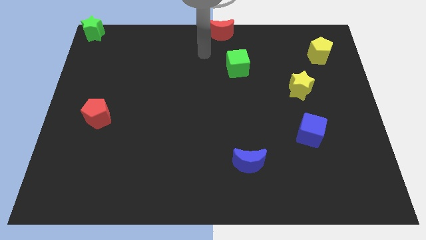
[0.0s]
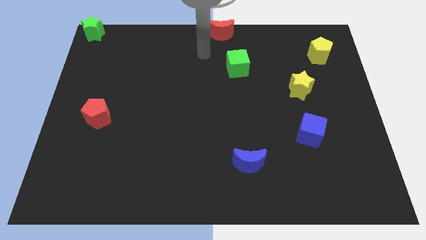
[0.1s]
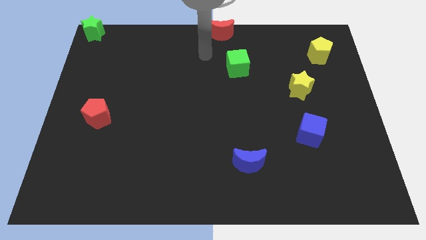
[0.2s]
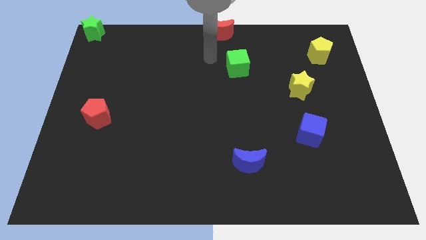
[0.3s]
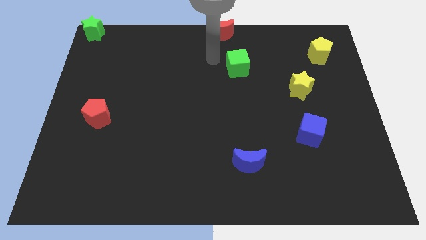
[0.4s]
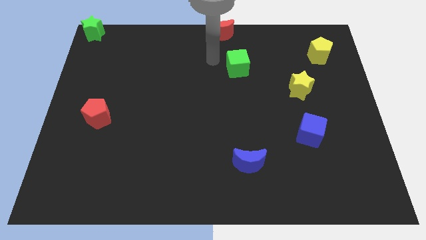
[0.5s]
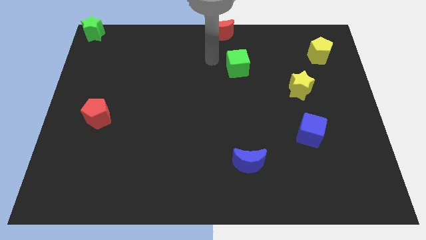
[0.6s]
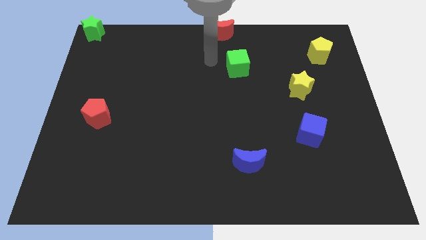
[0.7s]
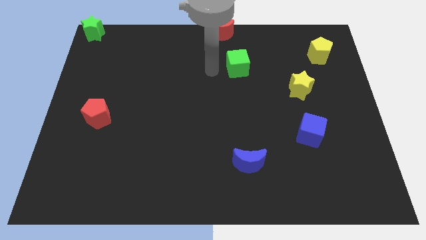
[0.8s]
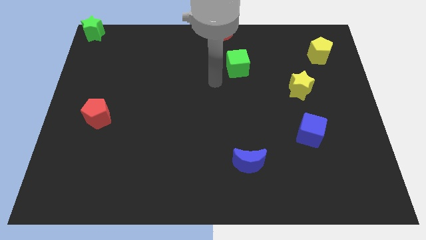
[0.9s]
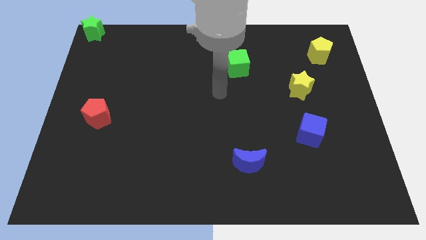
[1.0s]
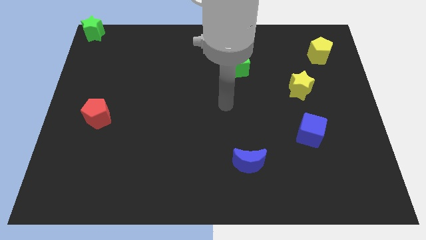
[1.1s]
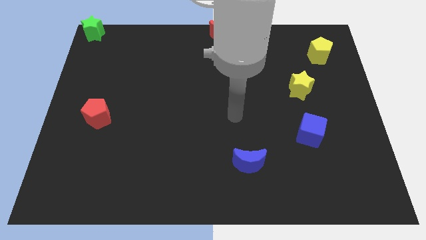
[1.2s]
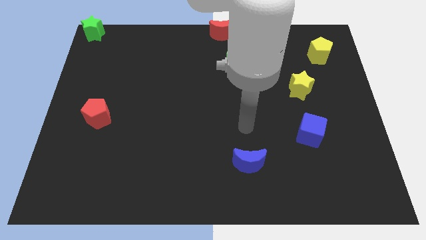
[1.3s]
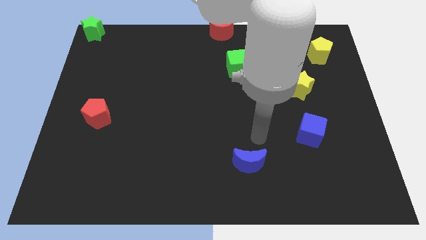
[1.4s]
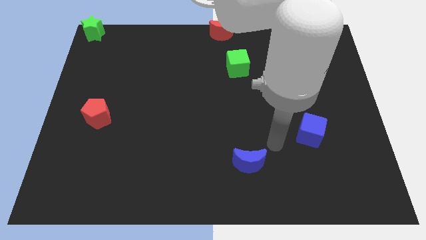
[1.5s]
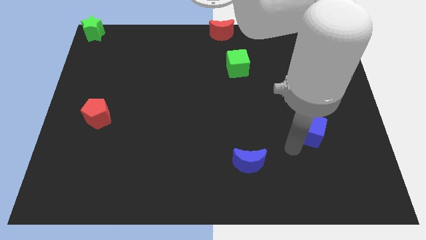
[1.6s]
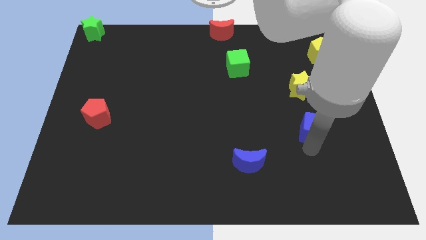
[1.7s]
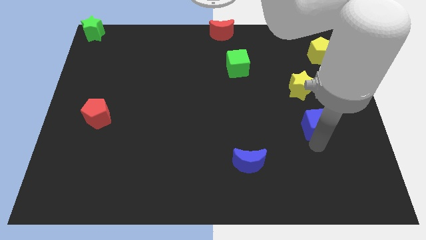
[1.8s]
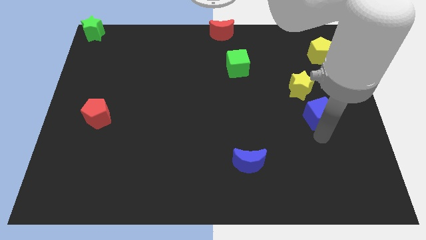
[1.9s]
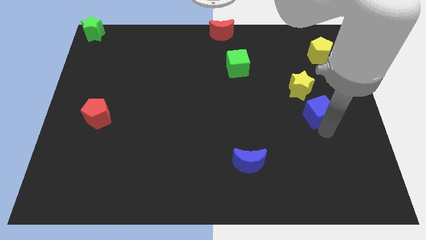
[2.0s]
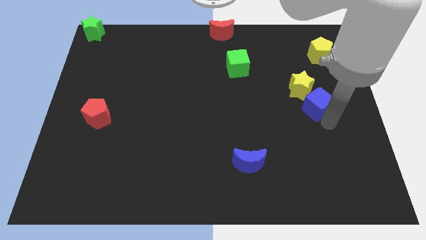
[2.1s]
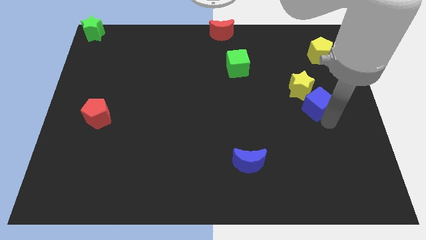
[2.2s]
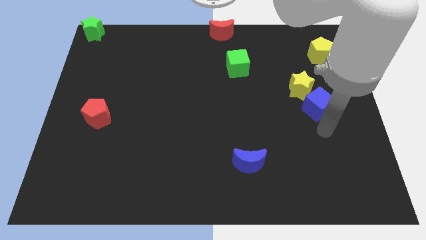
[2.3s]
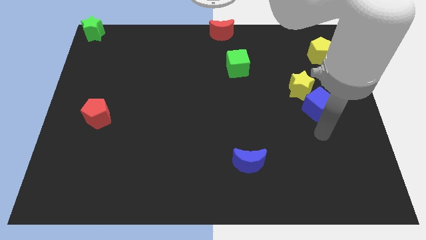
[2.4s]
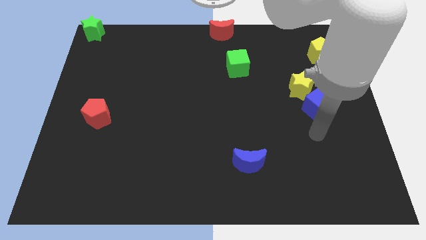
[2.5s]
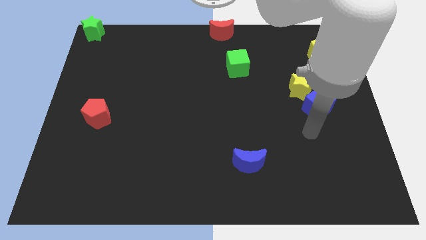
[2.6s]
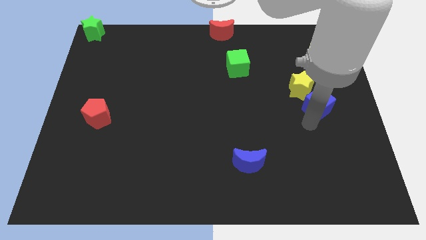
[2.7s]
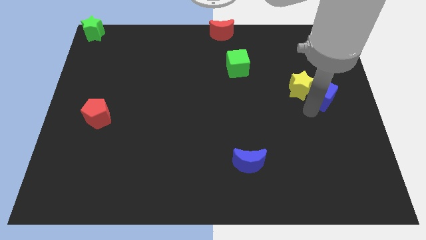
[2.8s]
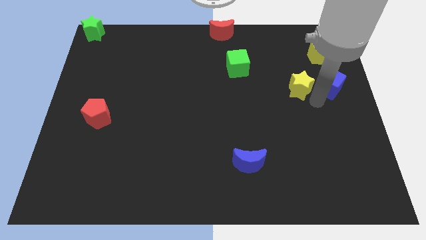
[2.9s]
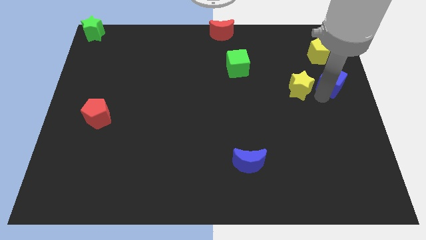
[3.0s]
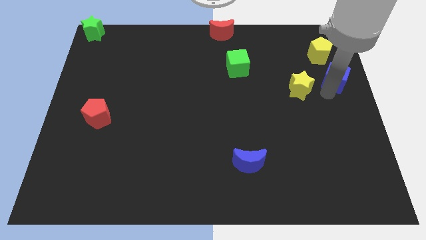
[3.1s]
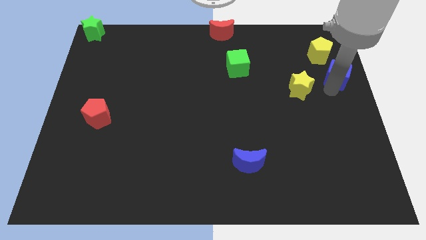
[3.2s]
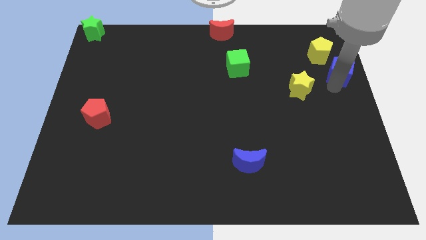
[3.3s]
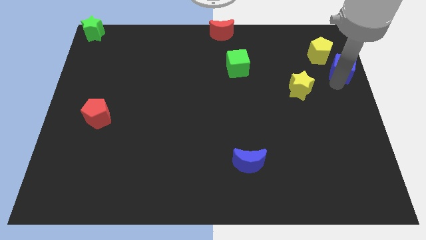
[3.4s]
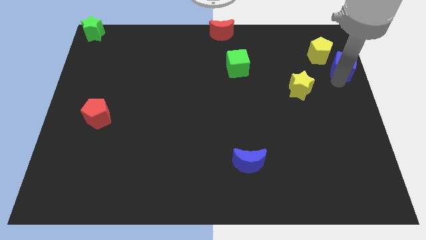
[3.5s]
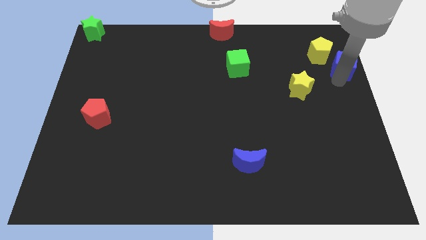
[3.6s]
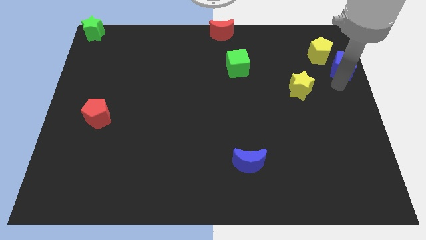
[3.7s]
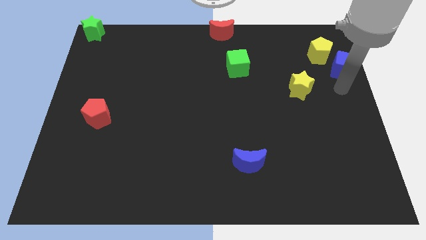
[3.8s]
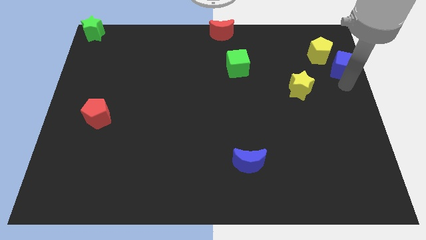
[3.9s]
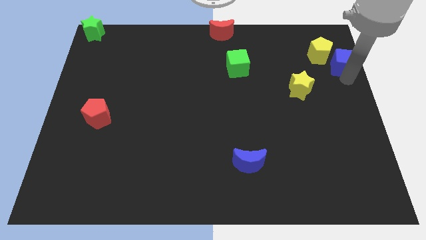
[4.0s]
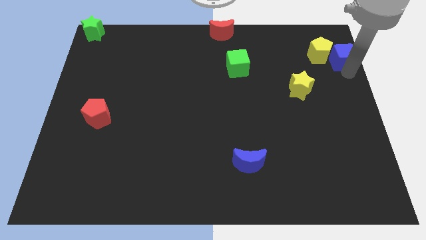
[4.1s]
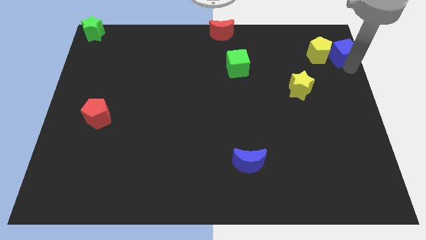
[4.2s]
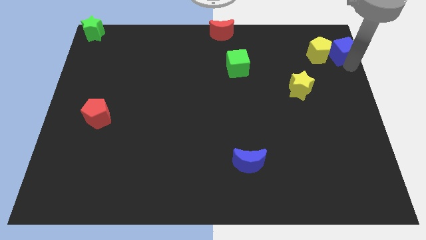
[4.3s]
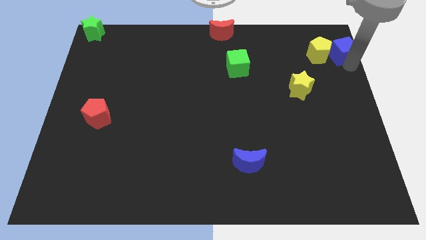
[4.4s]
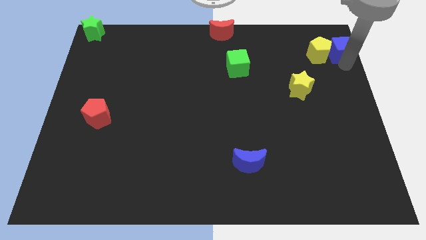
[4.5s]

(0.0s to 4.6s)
place the blue cube right to the yellow pentagon

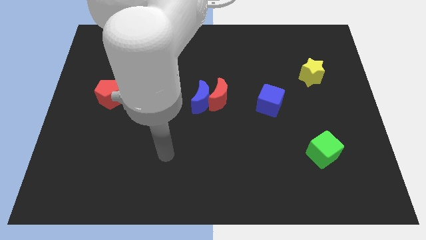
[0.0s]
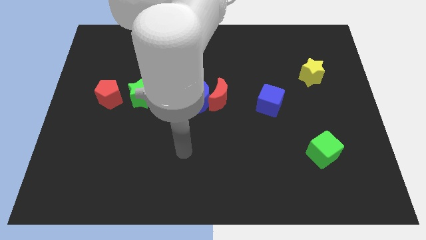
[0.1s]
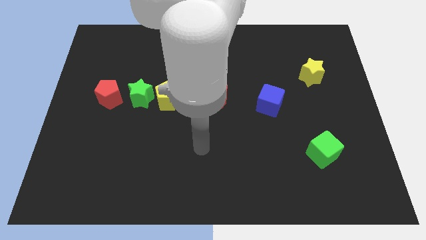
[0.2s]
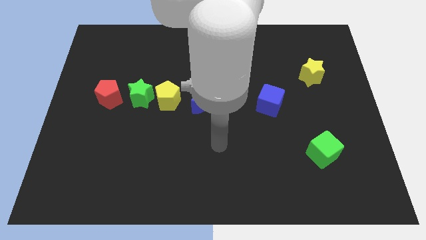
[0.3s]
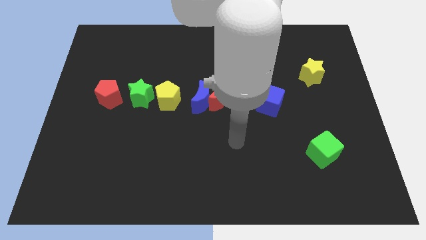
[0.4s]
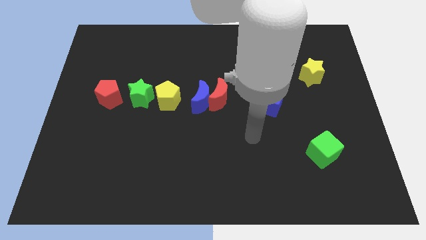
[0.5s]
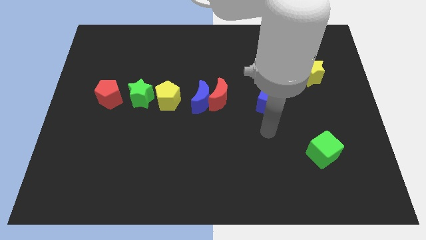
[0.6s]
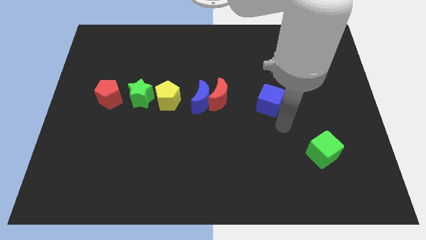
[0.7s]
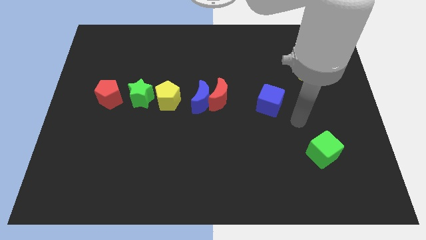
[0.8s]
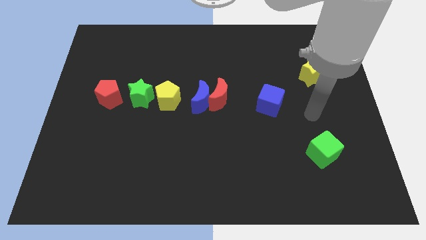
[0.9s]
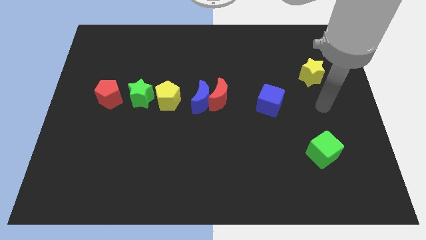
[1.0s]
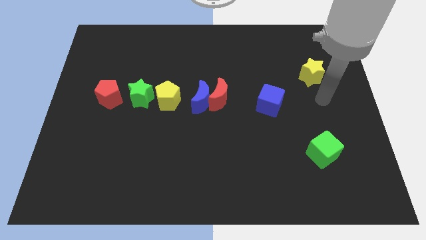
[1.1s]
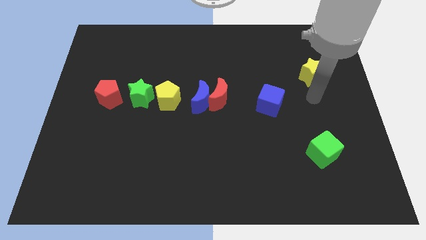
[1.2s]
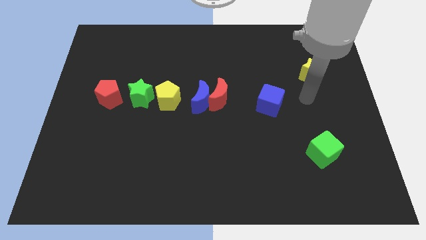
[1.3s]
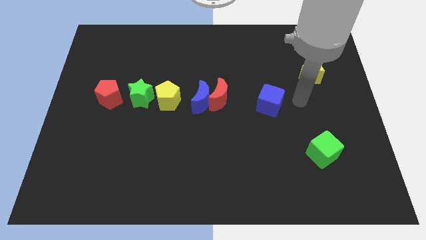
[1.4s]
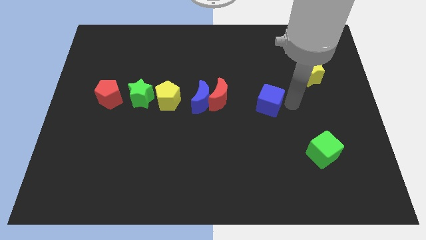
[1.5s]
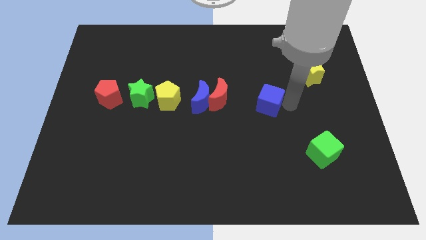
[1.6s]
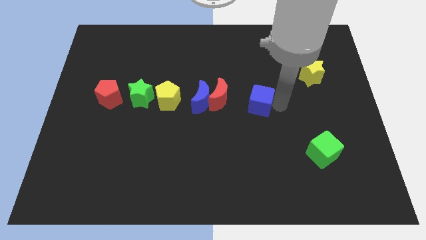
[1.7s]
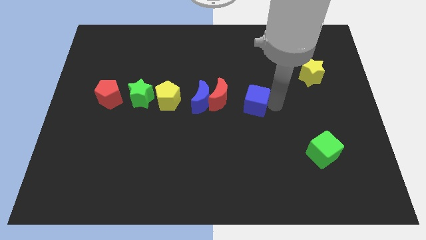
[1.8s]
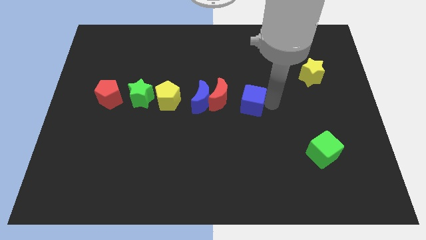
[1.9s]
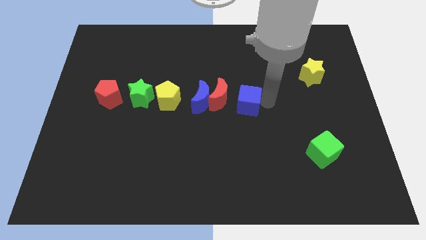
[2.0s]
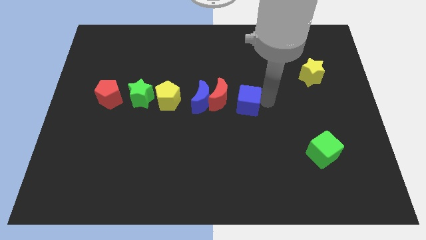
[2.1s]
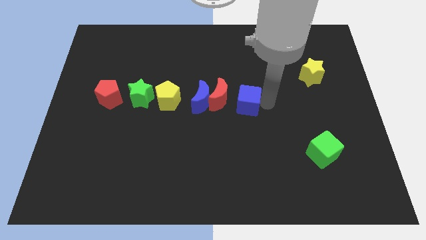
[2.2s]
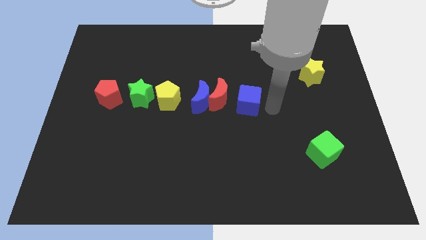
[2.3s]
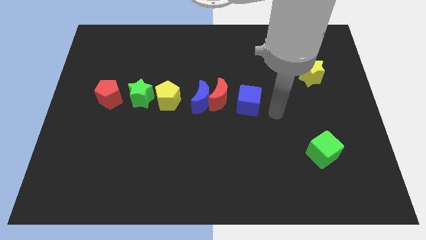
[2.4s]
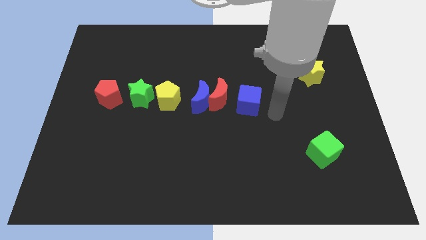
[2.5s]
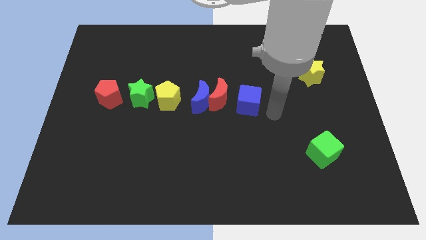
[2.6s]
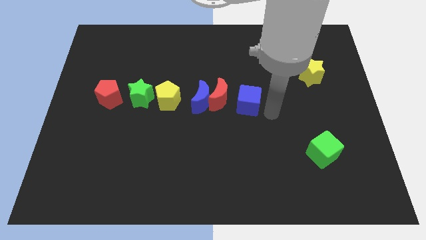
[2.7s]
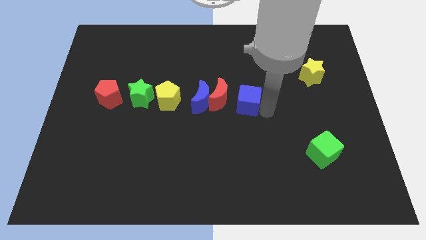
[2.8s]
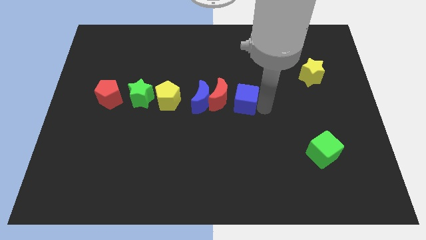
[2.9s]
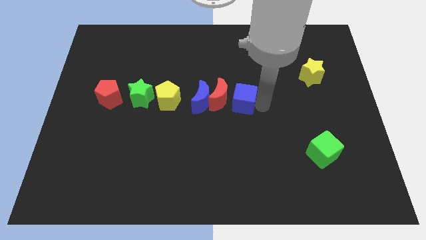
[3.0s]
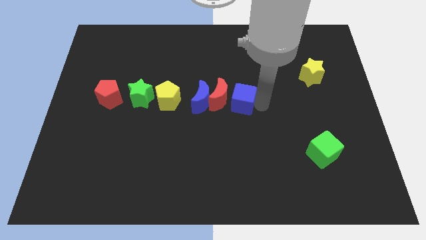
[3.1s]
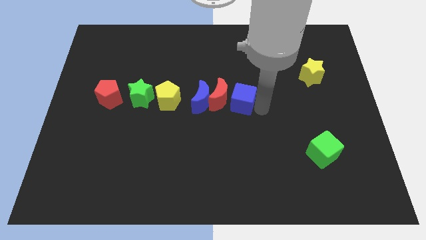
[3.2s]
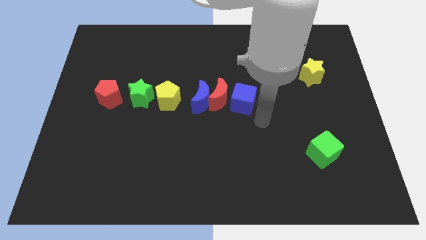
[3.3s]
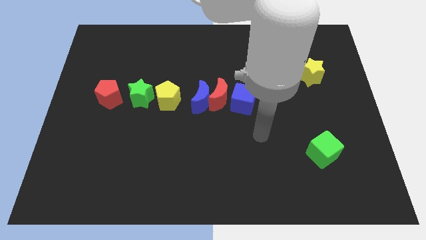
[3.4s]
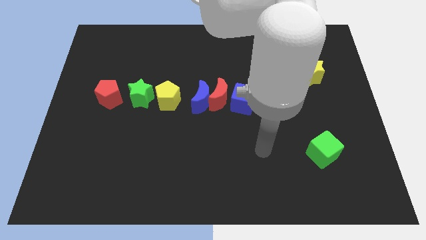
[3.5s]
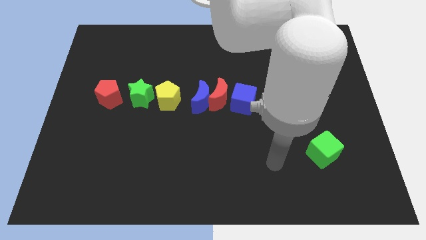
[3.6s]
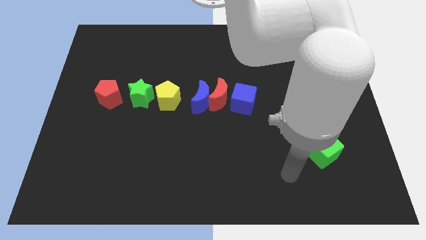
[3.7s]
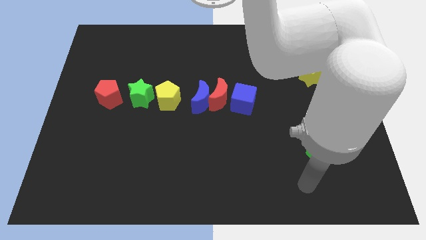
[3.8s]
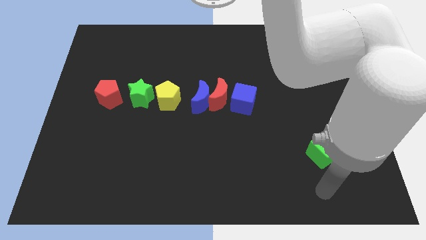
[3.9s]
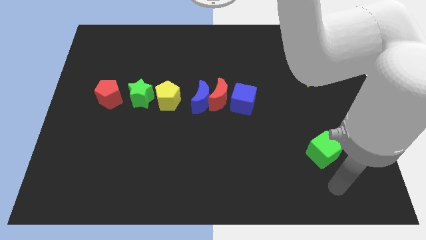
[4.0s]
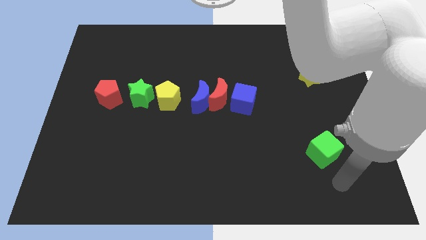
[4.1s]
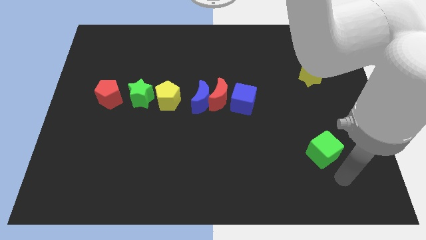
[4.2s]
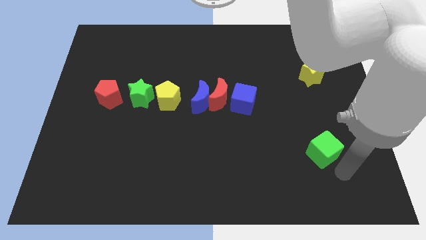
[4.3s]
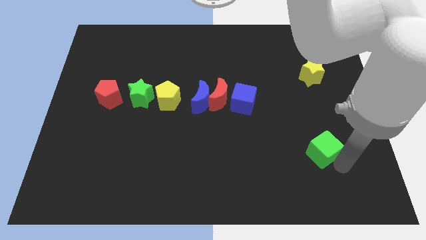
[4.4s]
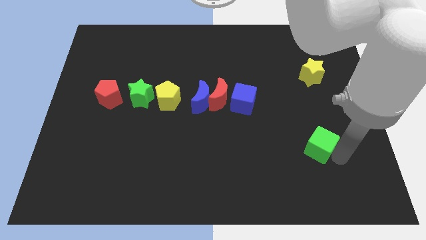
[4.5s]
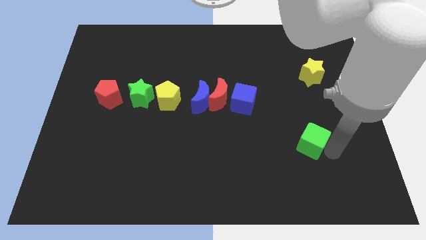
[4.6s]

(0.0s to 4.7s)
move the blue cube right to the red crescent
